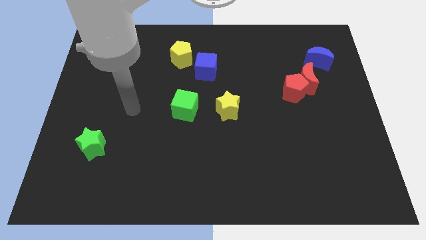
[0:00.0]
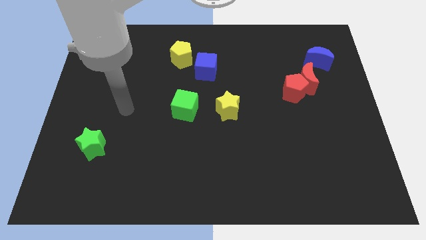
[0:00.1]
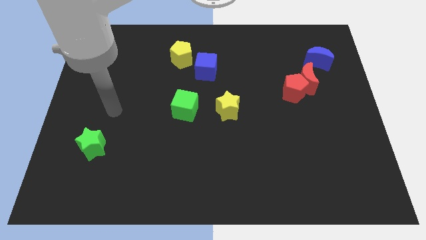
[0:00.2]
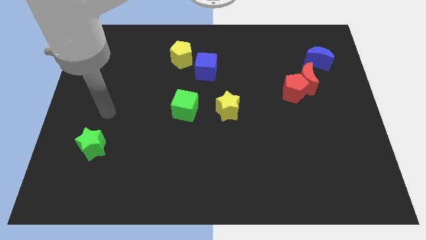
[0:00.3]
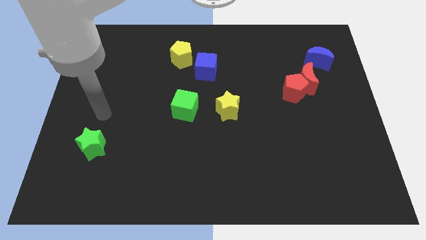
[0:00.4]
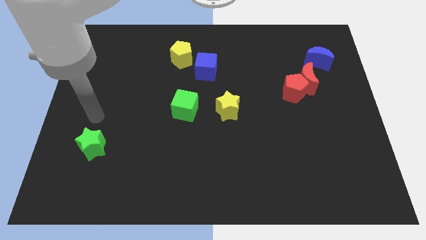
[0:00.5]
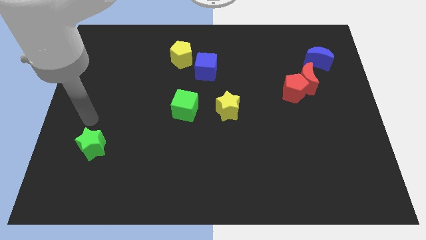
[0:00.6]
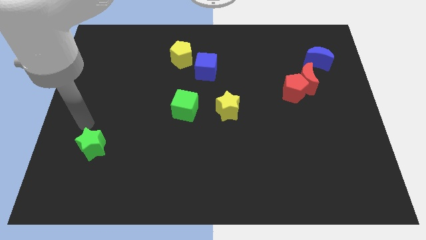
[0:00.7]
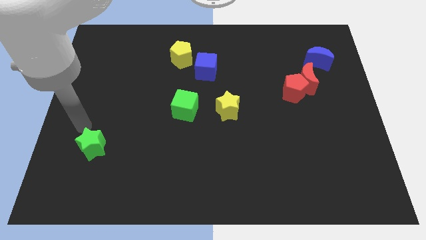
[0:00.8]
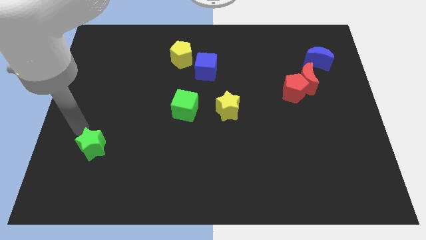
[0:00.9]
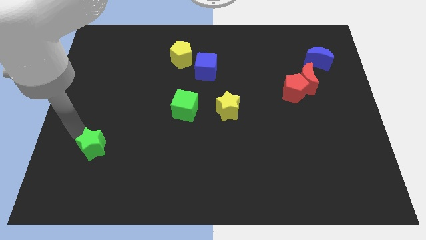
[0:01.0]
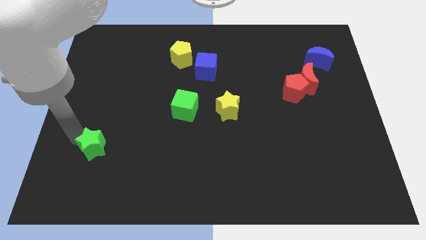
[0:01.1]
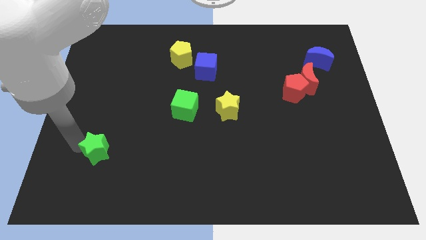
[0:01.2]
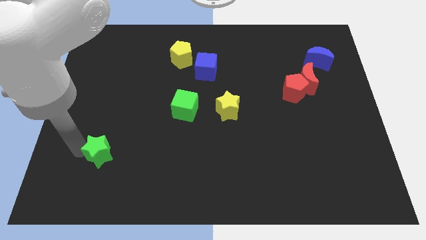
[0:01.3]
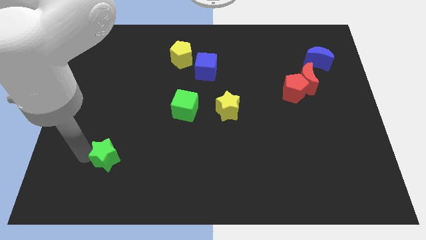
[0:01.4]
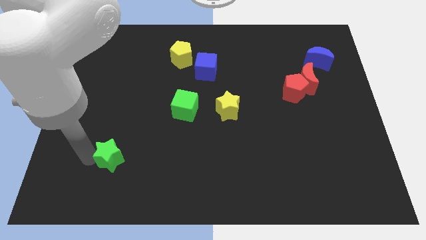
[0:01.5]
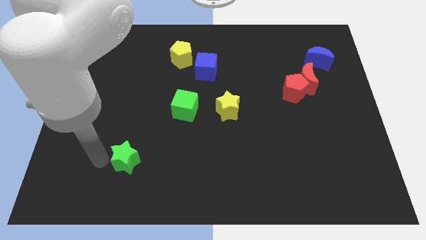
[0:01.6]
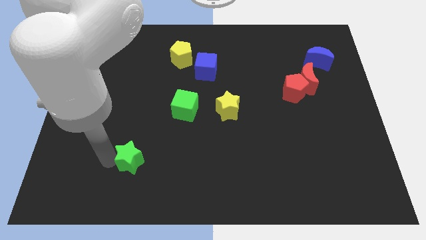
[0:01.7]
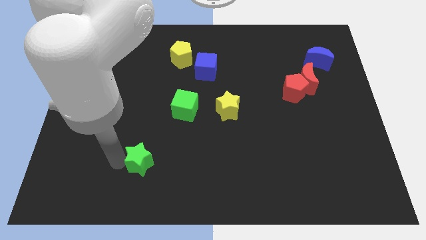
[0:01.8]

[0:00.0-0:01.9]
move the green star to the right of the board

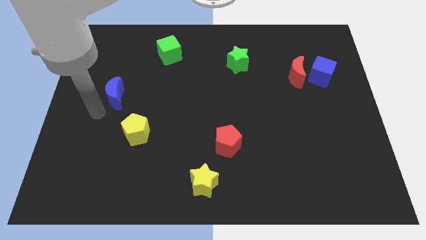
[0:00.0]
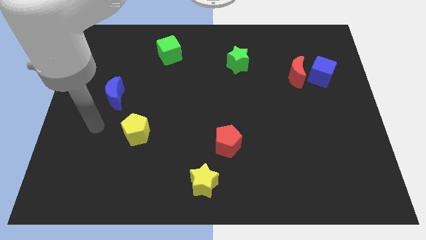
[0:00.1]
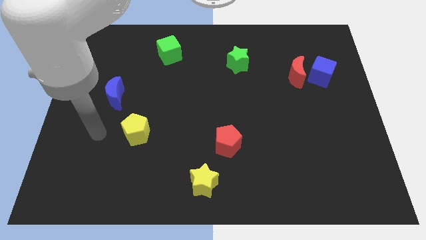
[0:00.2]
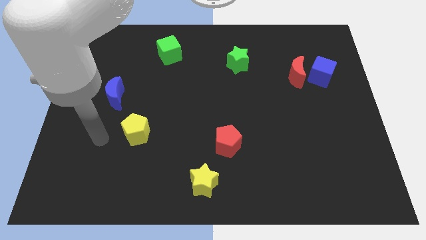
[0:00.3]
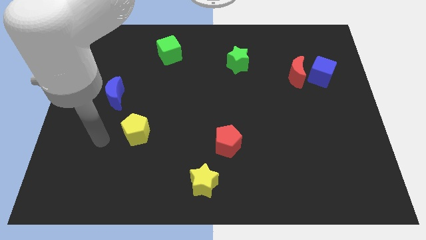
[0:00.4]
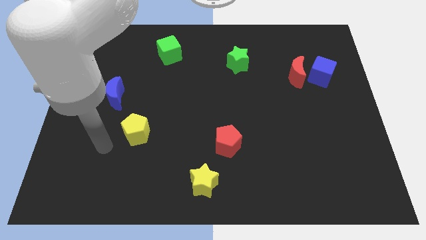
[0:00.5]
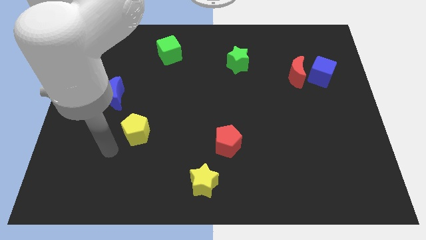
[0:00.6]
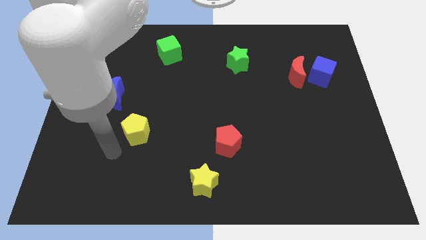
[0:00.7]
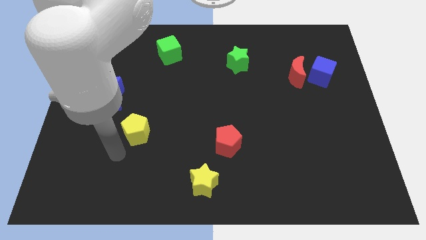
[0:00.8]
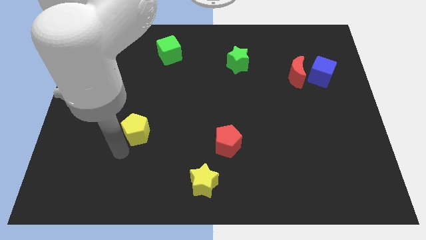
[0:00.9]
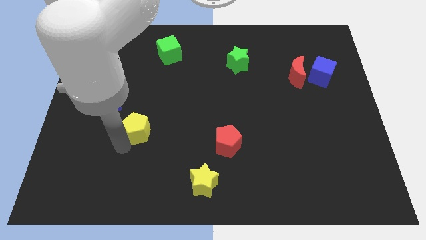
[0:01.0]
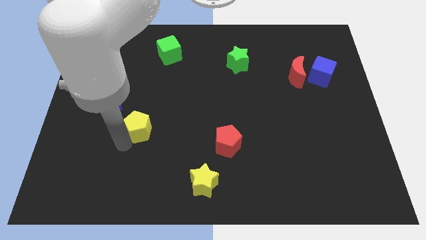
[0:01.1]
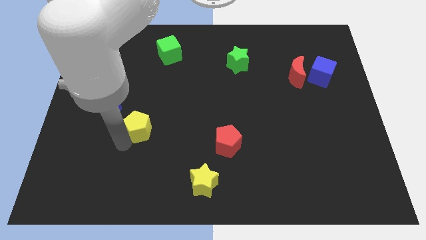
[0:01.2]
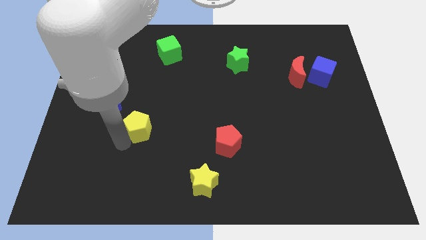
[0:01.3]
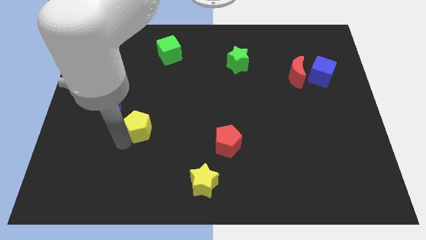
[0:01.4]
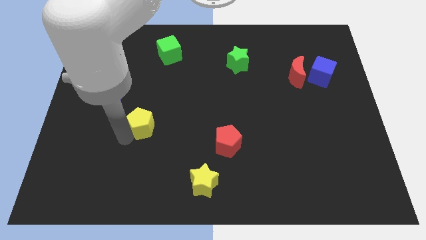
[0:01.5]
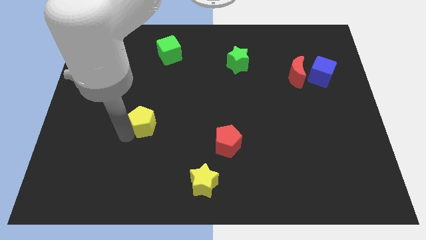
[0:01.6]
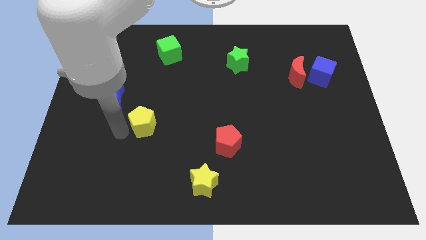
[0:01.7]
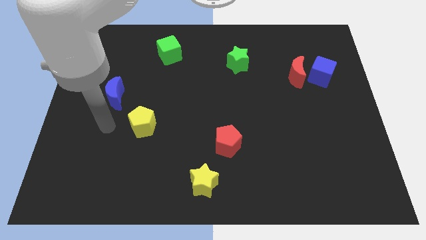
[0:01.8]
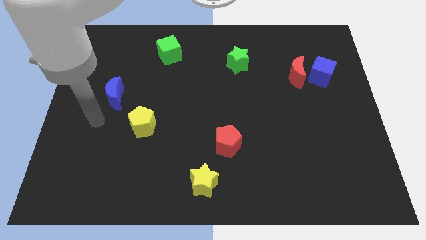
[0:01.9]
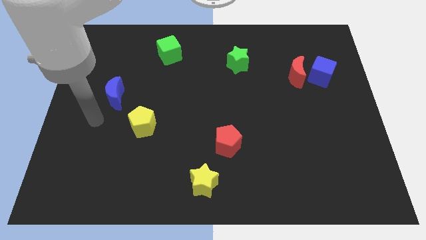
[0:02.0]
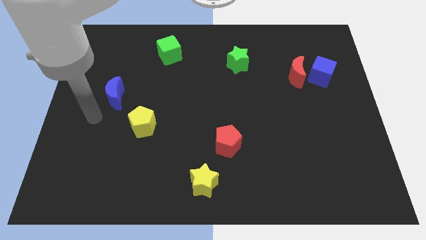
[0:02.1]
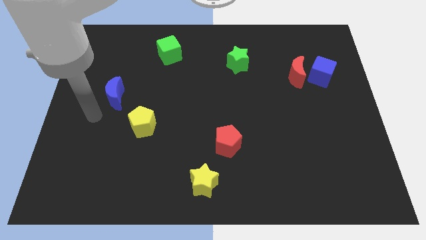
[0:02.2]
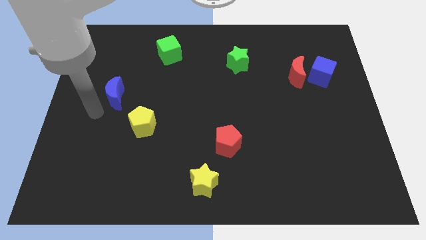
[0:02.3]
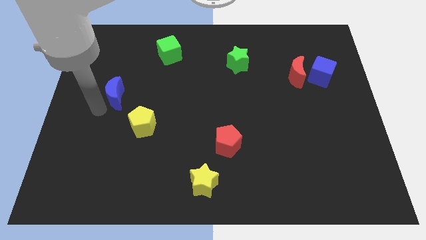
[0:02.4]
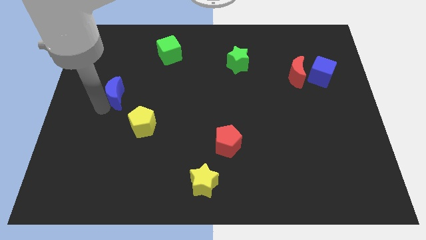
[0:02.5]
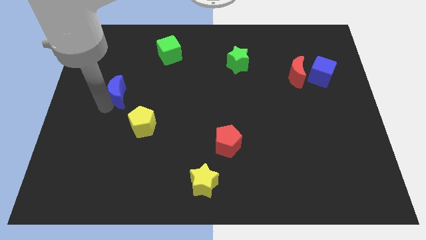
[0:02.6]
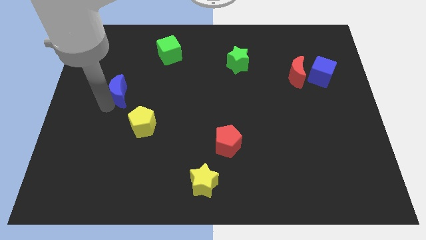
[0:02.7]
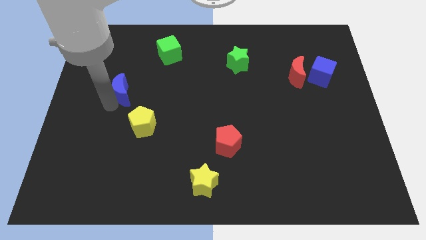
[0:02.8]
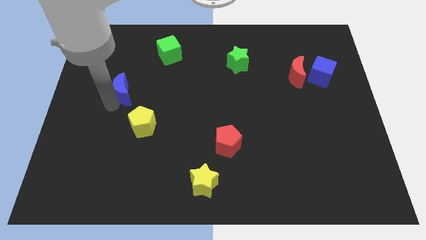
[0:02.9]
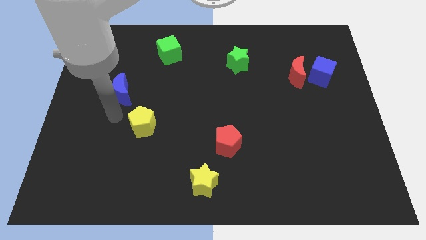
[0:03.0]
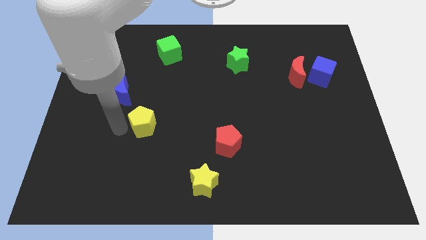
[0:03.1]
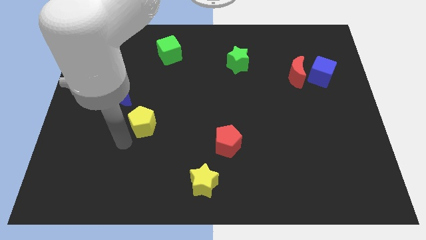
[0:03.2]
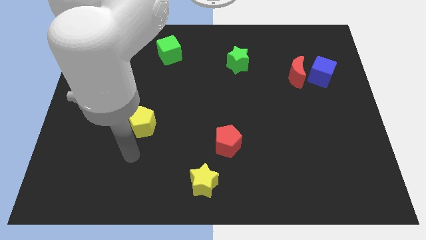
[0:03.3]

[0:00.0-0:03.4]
slightly push the yellow pentagon to the top

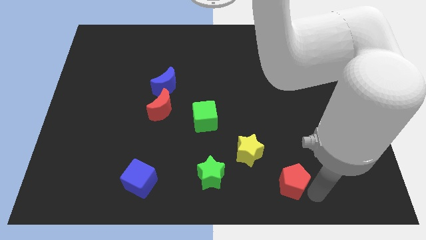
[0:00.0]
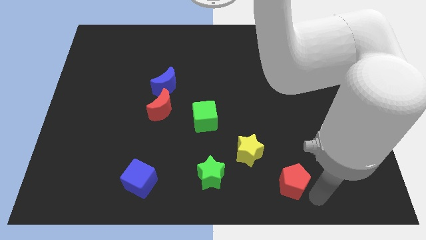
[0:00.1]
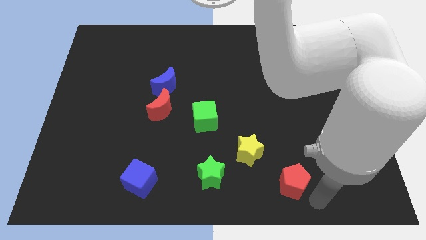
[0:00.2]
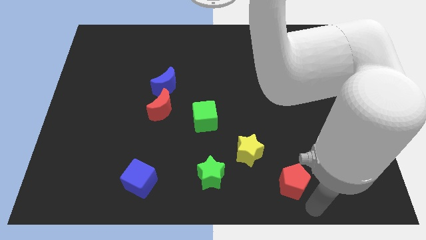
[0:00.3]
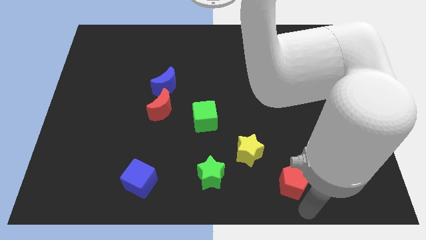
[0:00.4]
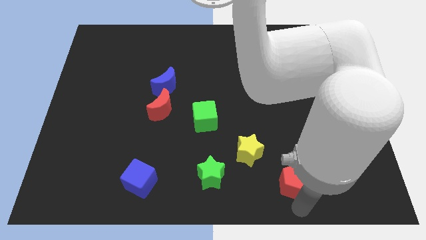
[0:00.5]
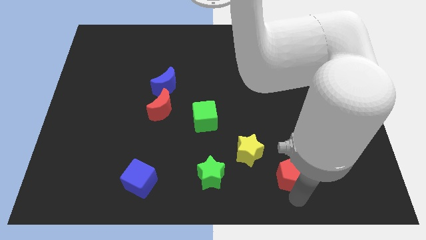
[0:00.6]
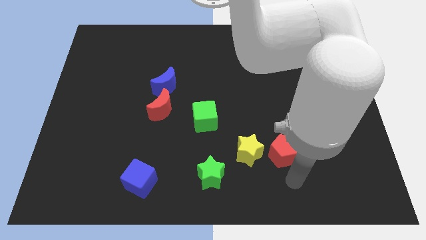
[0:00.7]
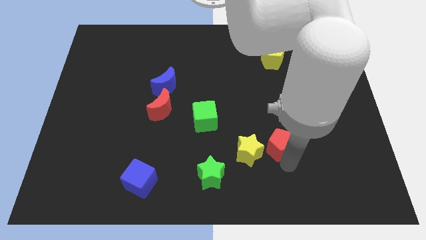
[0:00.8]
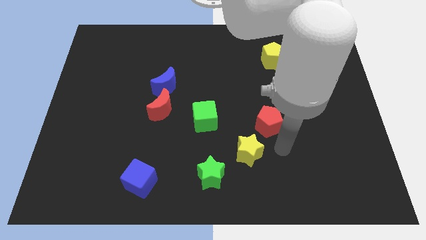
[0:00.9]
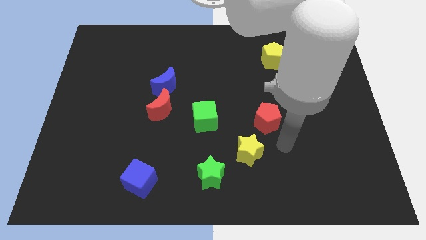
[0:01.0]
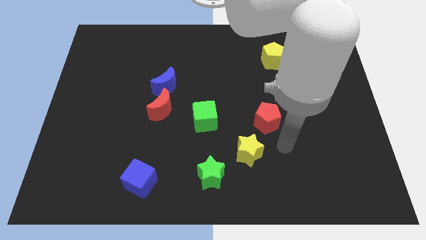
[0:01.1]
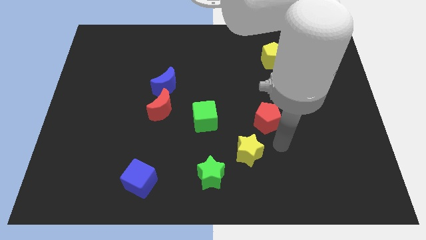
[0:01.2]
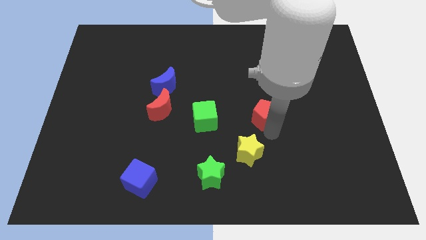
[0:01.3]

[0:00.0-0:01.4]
place the red pentagon right to the green cube

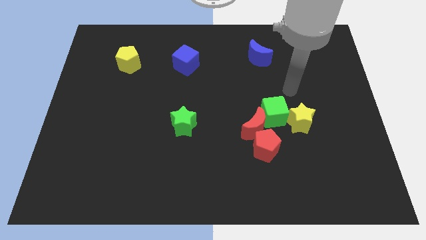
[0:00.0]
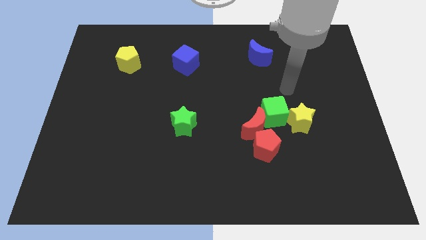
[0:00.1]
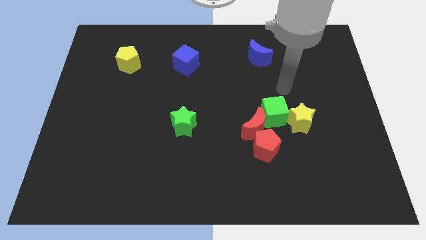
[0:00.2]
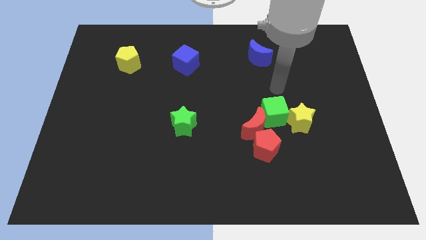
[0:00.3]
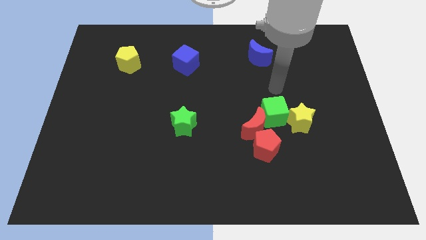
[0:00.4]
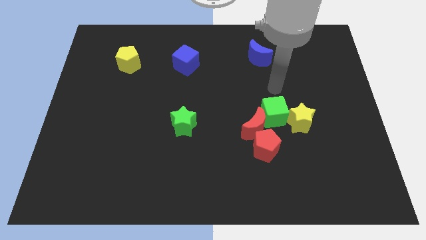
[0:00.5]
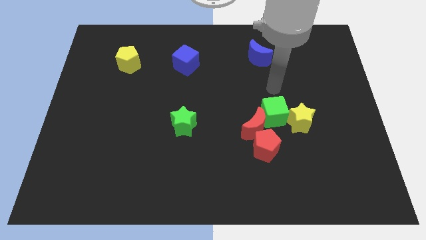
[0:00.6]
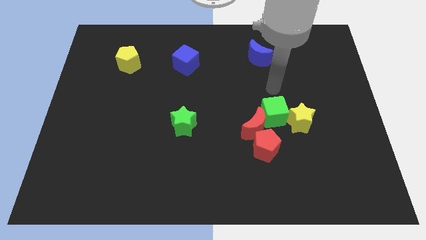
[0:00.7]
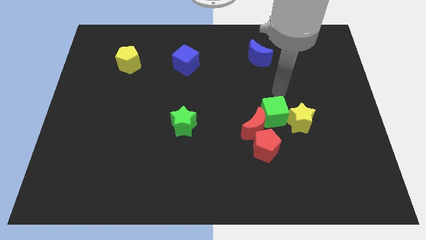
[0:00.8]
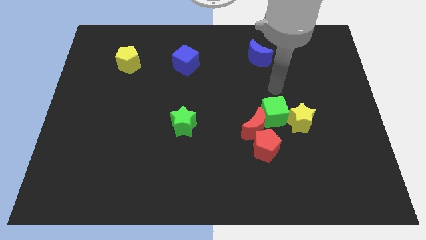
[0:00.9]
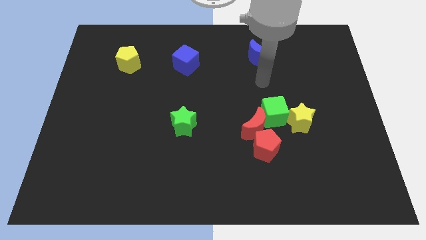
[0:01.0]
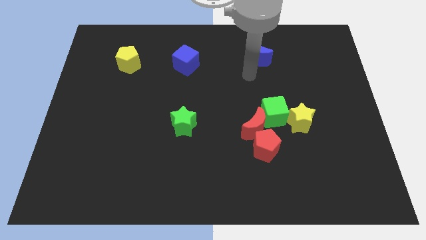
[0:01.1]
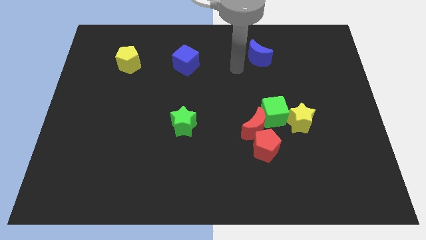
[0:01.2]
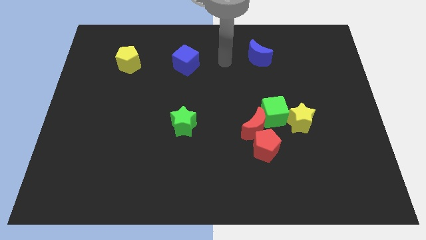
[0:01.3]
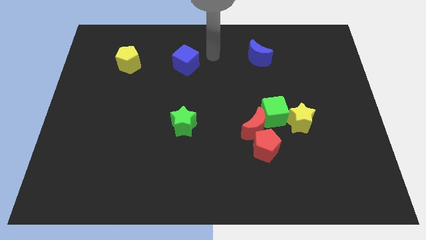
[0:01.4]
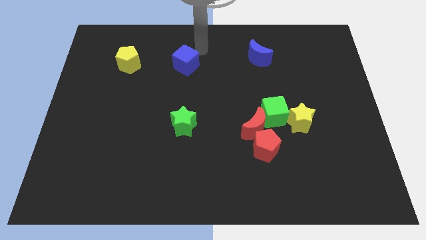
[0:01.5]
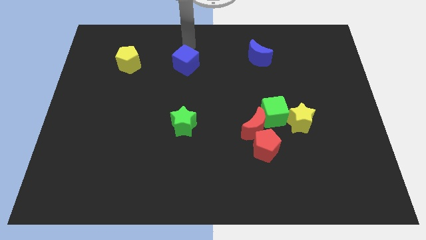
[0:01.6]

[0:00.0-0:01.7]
point your arm above the blue cube

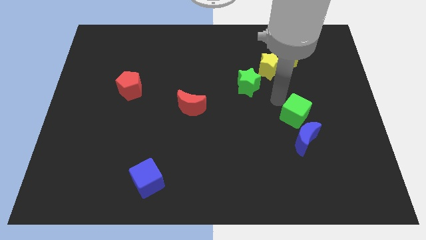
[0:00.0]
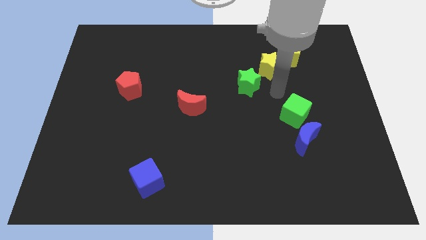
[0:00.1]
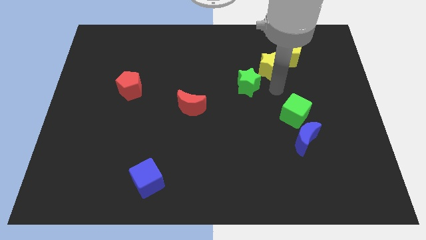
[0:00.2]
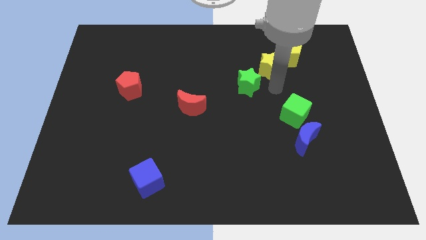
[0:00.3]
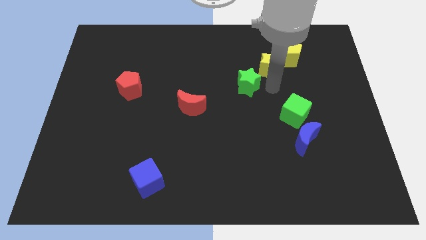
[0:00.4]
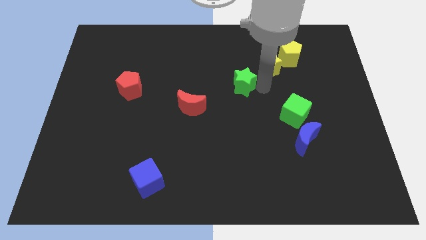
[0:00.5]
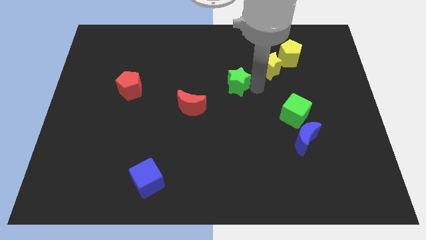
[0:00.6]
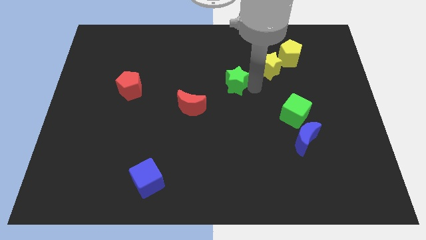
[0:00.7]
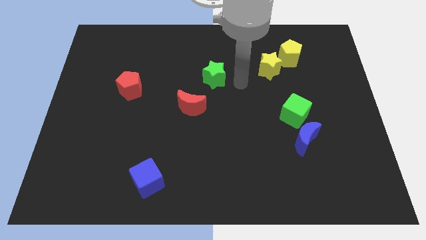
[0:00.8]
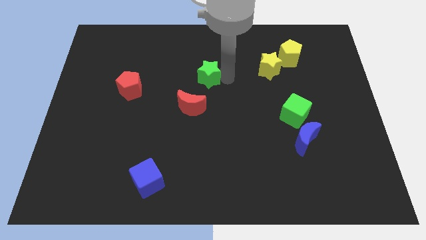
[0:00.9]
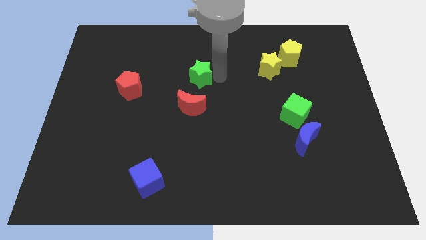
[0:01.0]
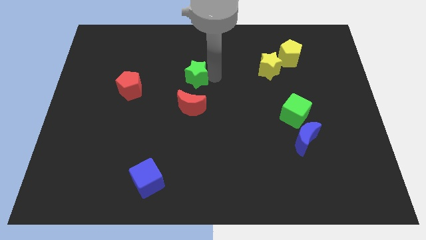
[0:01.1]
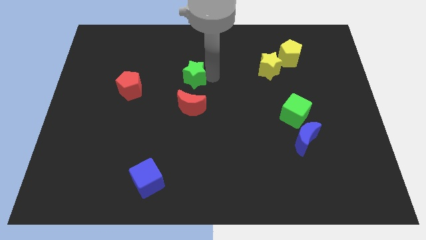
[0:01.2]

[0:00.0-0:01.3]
push the green star to the top of the red crescent
